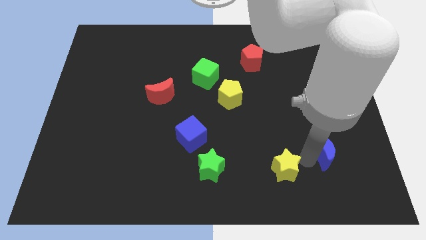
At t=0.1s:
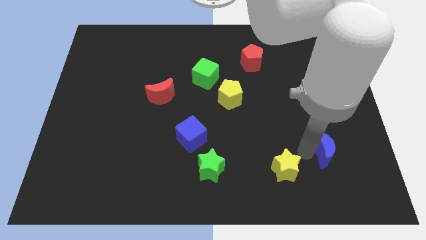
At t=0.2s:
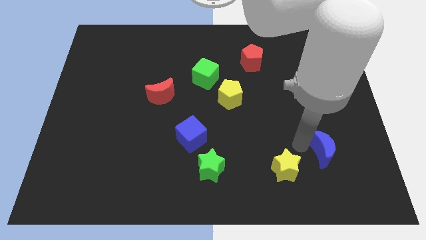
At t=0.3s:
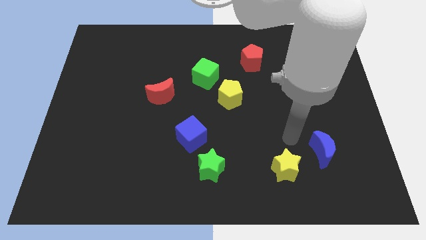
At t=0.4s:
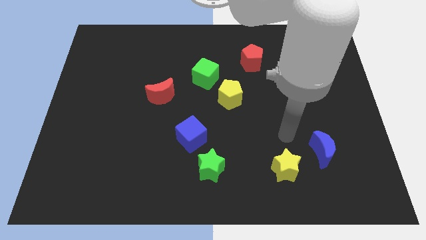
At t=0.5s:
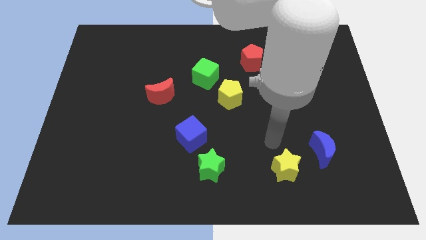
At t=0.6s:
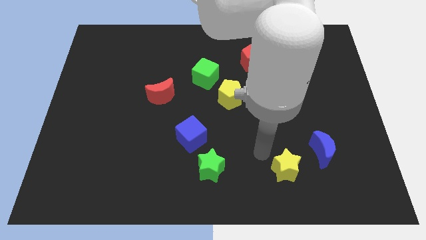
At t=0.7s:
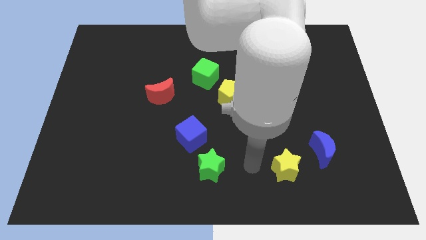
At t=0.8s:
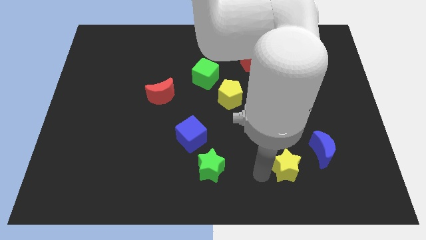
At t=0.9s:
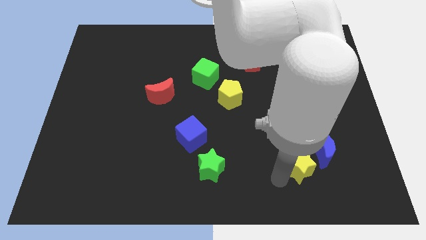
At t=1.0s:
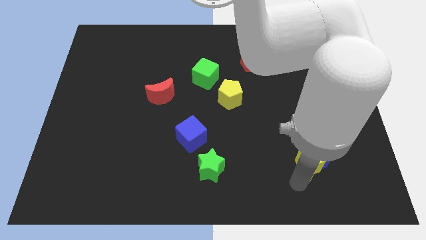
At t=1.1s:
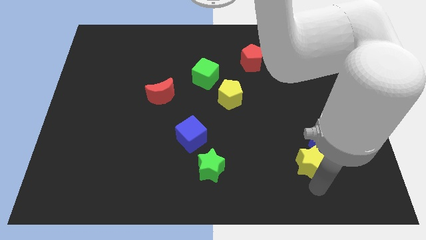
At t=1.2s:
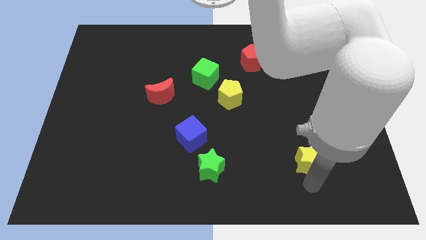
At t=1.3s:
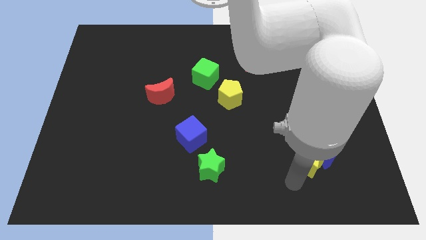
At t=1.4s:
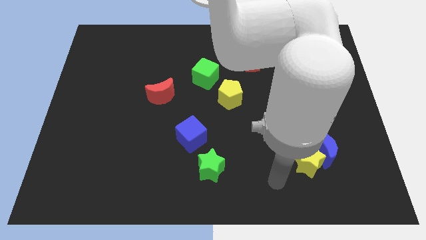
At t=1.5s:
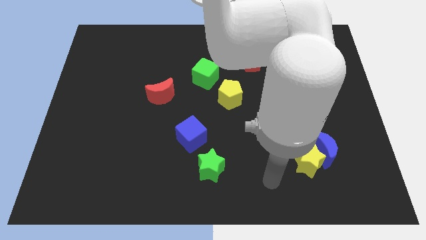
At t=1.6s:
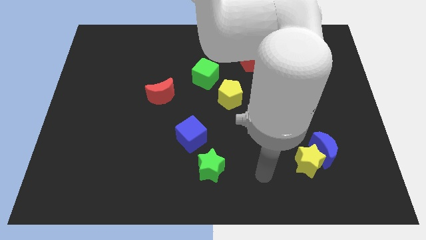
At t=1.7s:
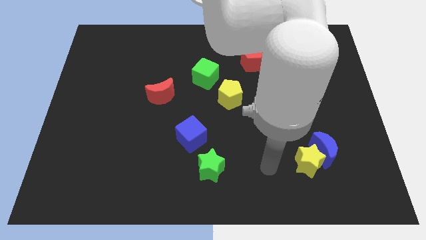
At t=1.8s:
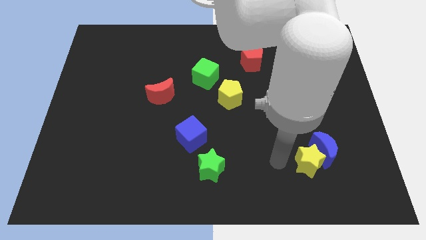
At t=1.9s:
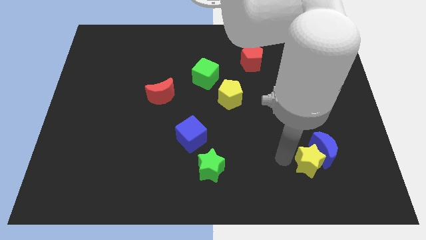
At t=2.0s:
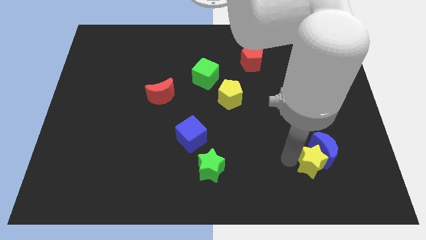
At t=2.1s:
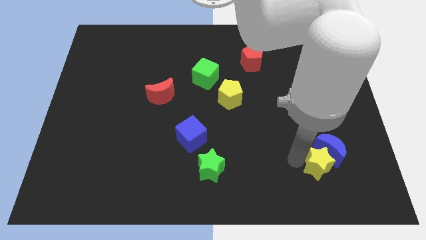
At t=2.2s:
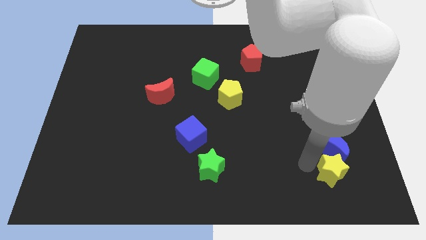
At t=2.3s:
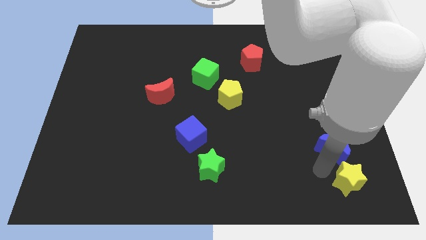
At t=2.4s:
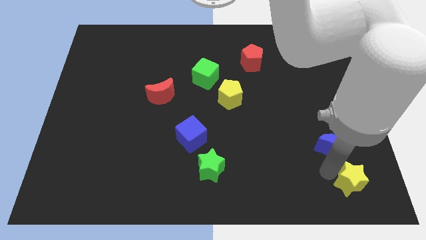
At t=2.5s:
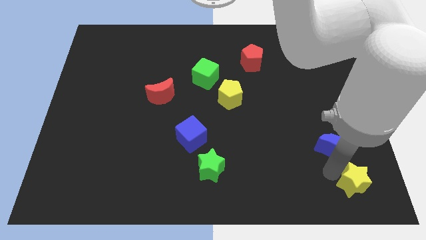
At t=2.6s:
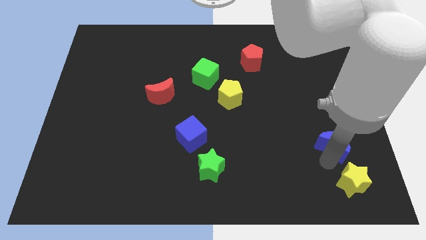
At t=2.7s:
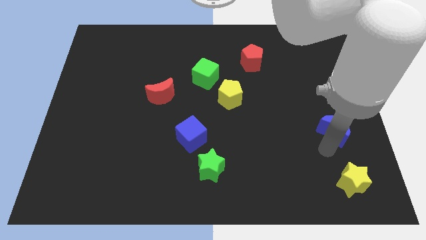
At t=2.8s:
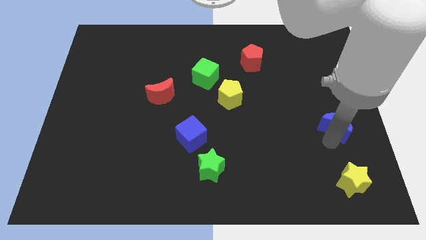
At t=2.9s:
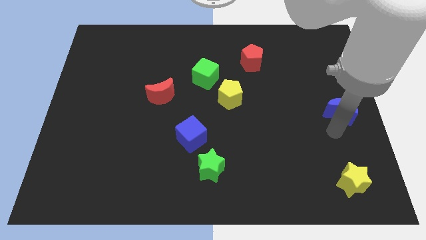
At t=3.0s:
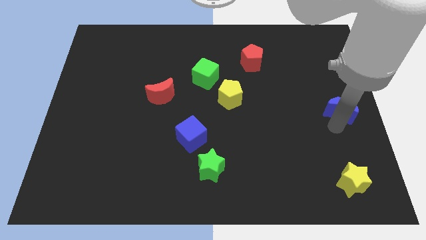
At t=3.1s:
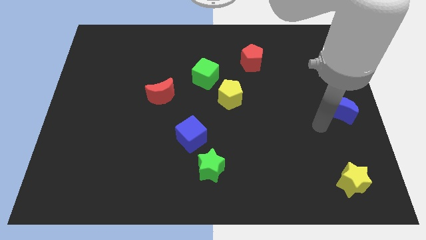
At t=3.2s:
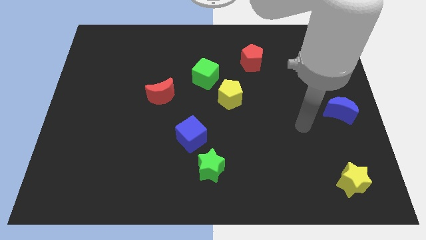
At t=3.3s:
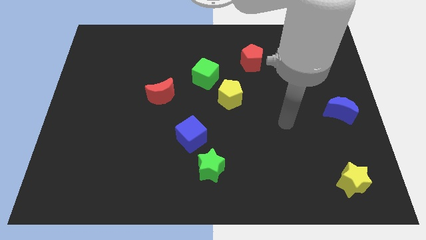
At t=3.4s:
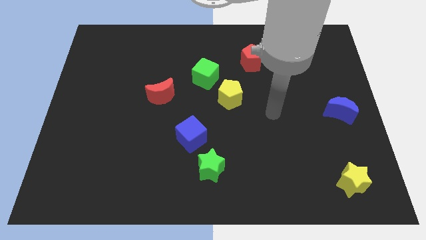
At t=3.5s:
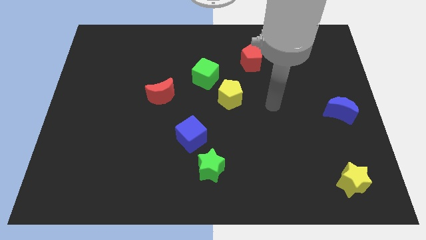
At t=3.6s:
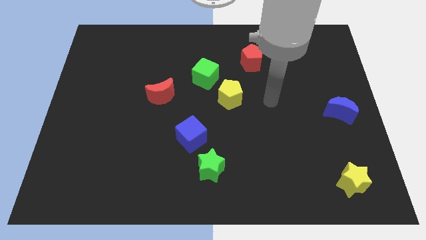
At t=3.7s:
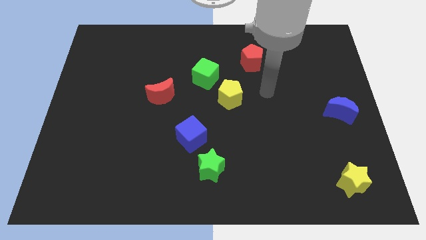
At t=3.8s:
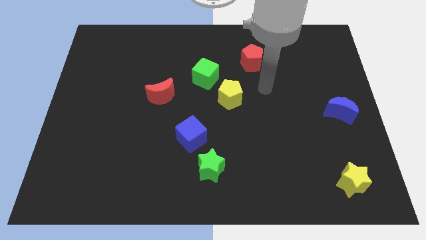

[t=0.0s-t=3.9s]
place blue moon to the center right

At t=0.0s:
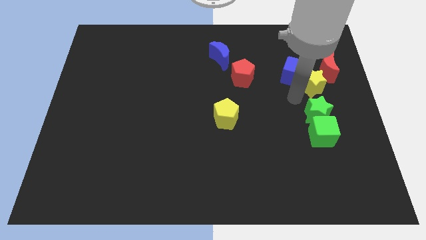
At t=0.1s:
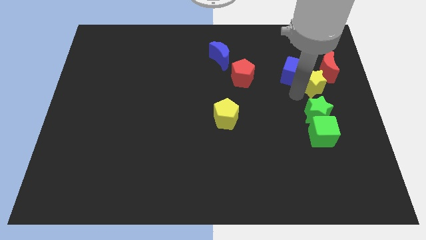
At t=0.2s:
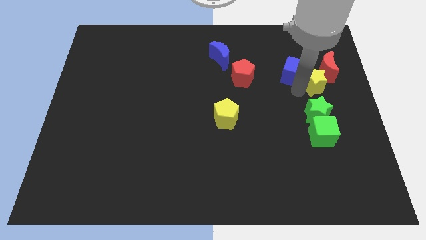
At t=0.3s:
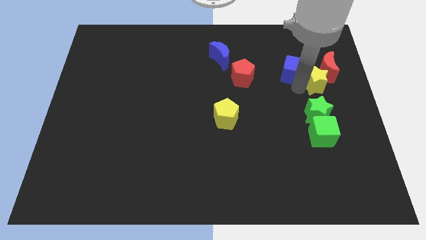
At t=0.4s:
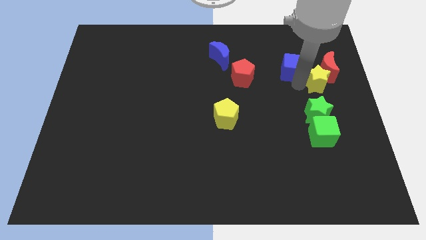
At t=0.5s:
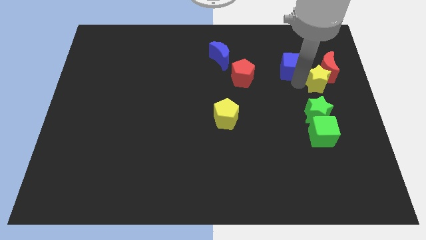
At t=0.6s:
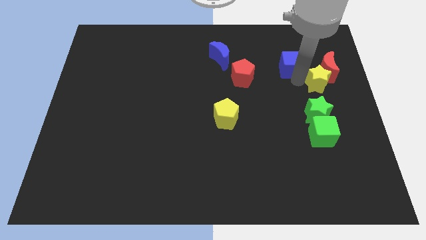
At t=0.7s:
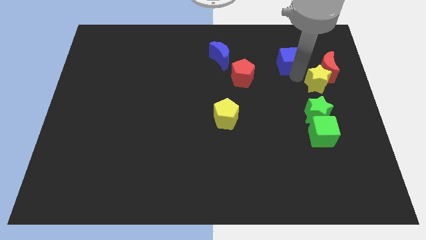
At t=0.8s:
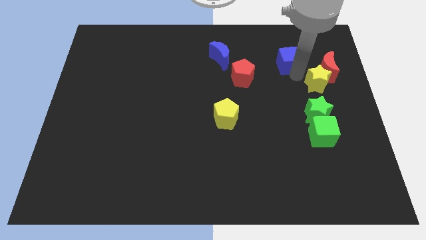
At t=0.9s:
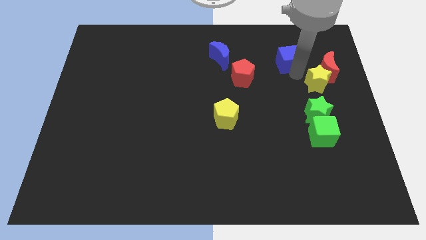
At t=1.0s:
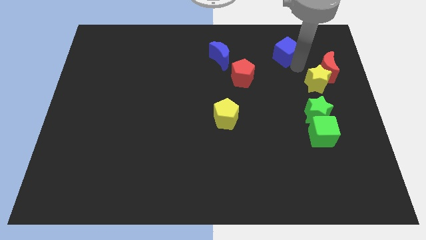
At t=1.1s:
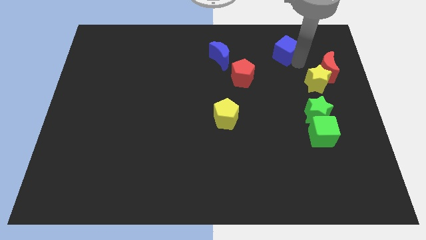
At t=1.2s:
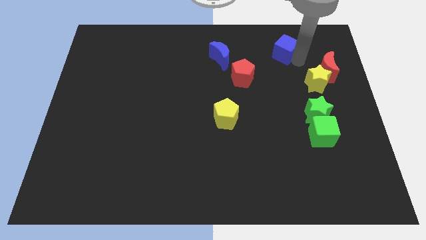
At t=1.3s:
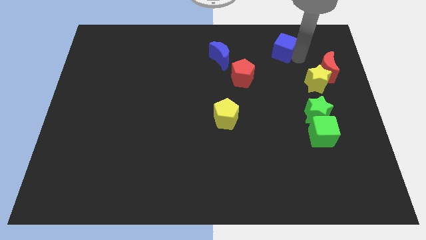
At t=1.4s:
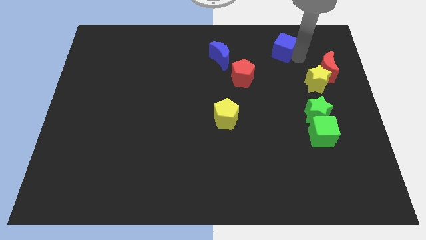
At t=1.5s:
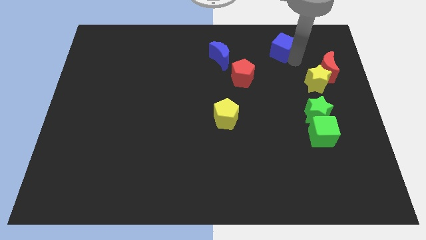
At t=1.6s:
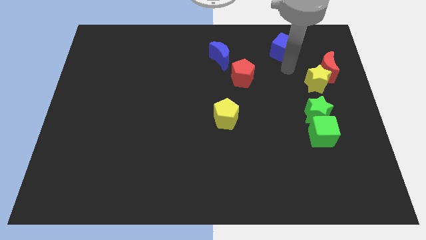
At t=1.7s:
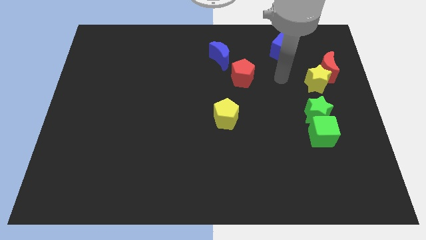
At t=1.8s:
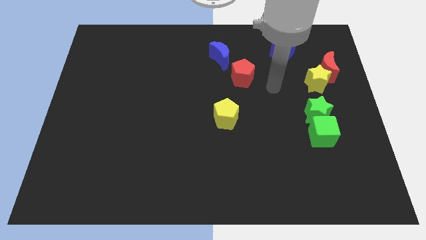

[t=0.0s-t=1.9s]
push the blue cube away from the yellow star

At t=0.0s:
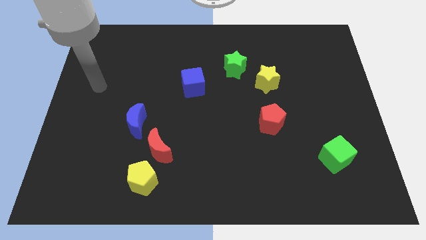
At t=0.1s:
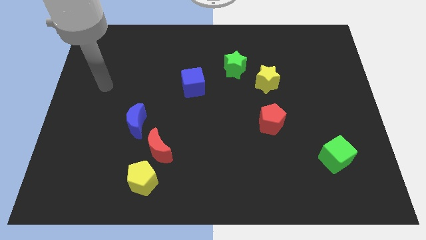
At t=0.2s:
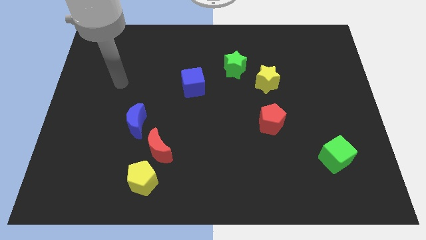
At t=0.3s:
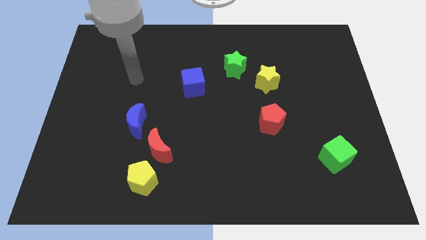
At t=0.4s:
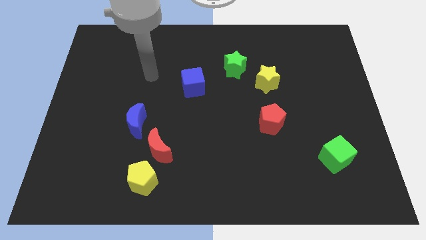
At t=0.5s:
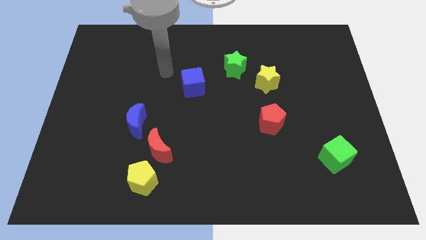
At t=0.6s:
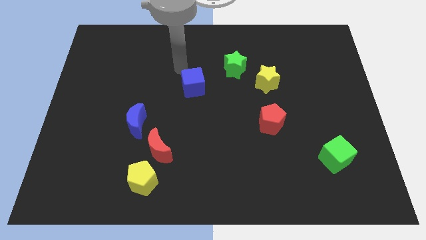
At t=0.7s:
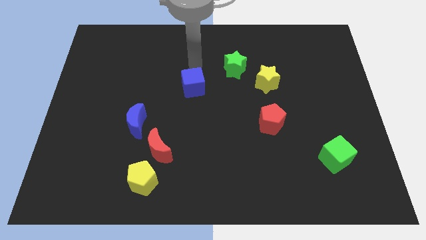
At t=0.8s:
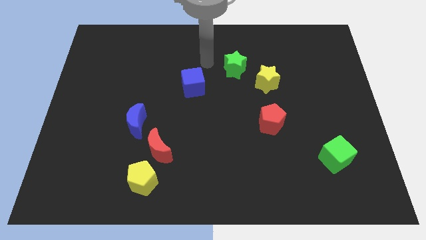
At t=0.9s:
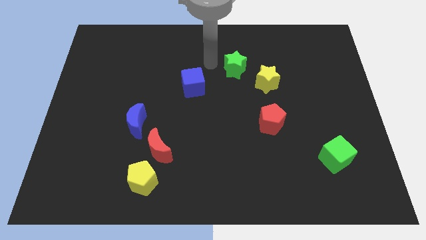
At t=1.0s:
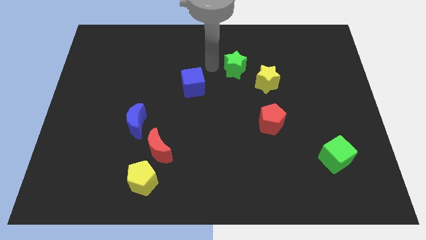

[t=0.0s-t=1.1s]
move your arm to the left of green star

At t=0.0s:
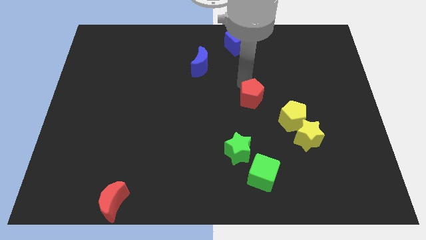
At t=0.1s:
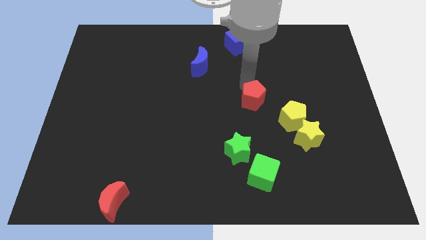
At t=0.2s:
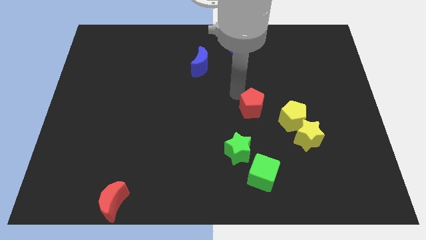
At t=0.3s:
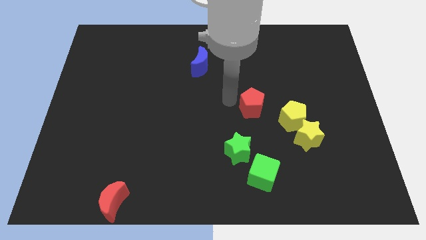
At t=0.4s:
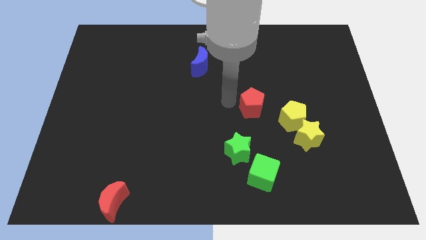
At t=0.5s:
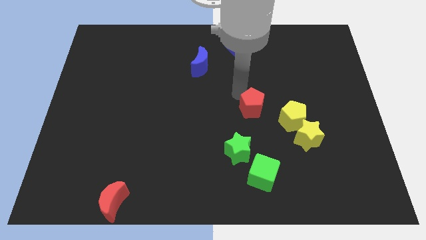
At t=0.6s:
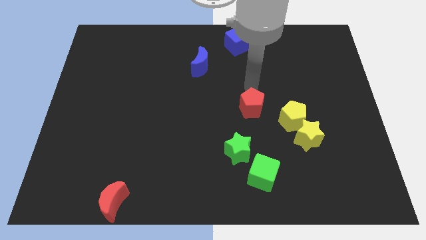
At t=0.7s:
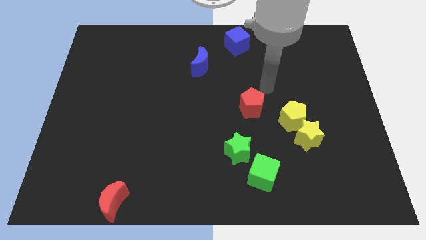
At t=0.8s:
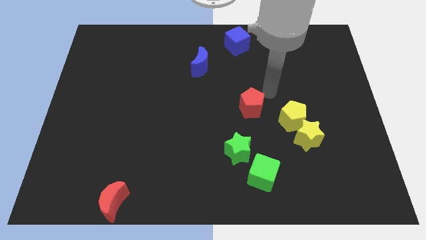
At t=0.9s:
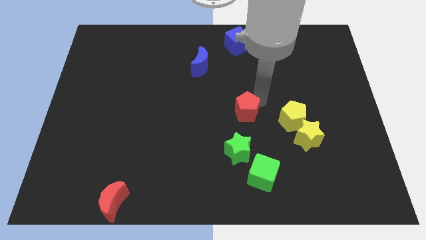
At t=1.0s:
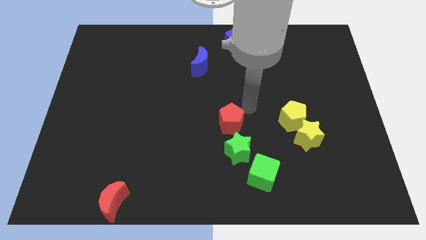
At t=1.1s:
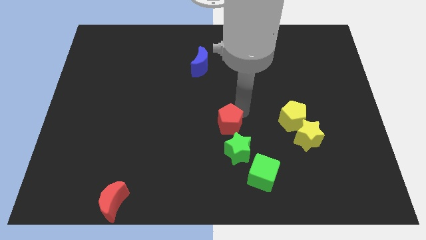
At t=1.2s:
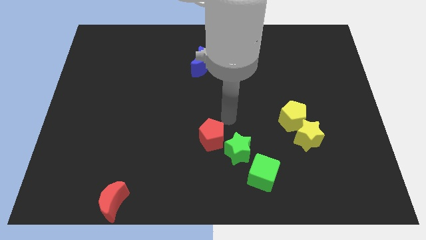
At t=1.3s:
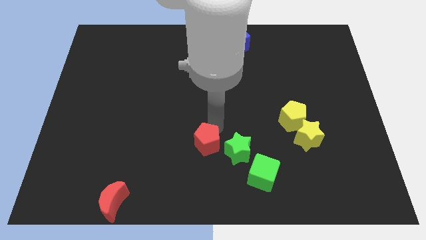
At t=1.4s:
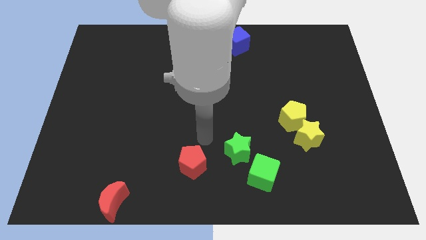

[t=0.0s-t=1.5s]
put the red pentagon to the left of the green star

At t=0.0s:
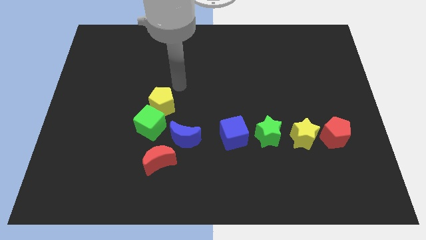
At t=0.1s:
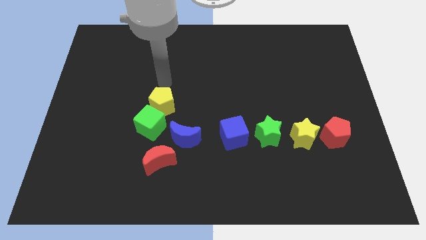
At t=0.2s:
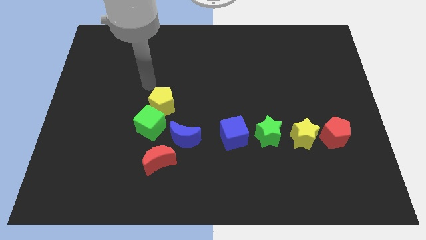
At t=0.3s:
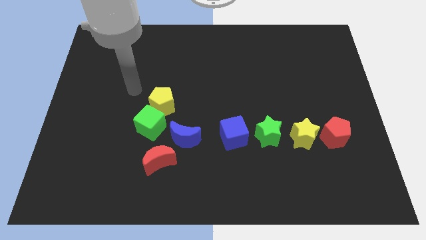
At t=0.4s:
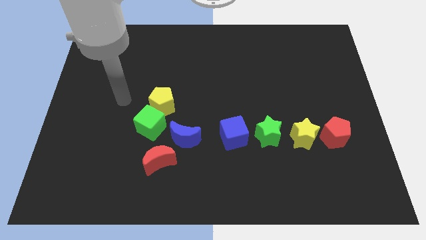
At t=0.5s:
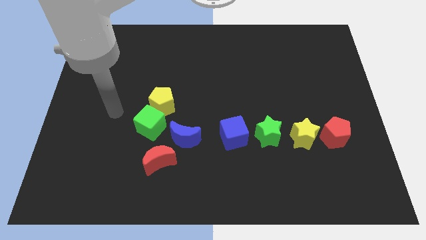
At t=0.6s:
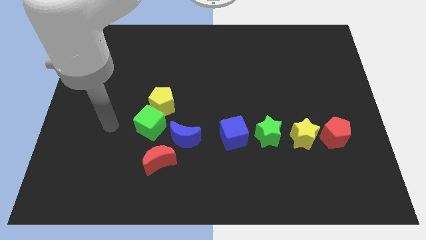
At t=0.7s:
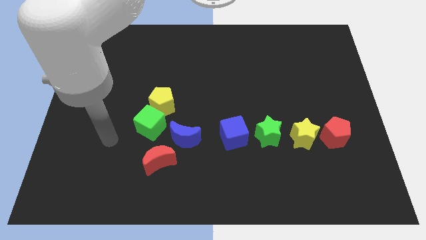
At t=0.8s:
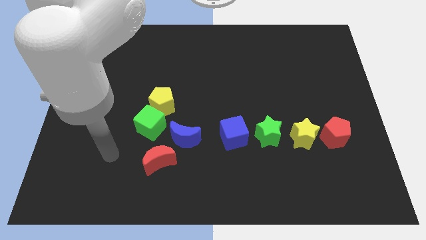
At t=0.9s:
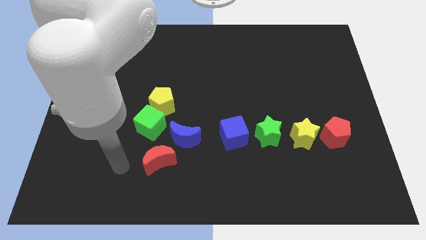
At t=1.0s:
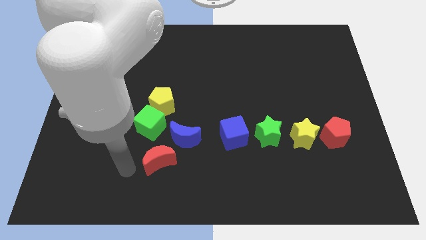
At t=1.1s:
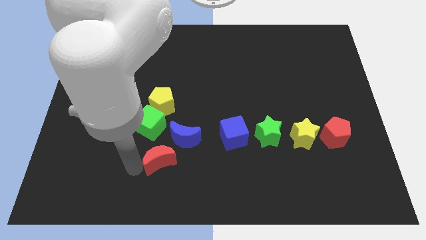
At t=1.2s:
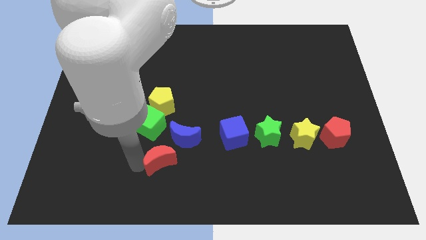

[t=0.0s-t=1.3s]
touch the bottom of red crescent
